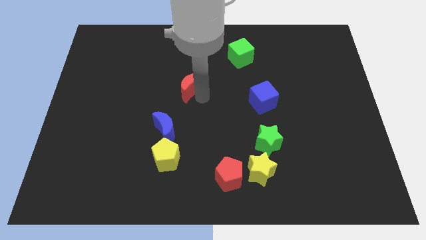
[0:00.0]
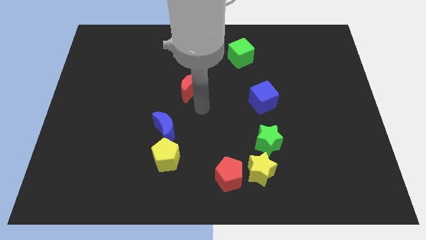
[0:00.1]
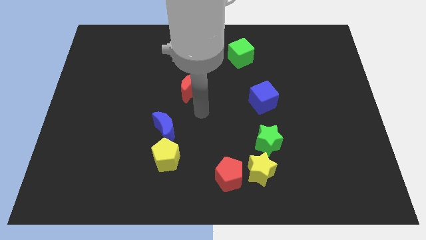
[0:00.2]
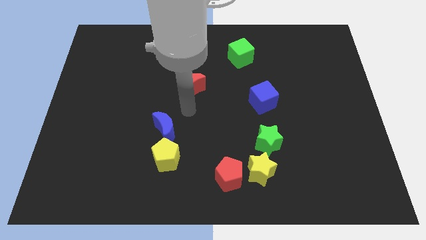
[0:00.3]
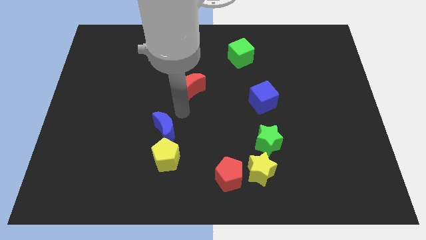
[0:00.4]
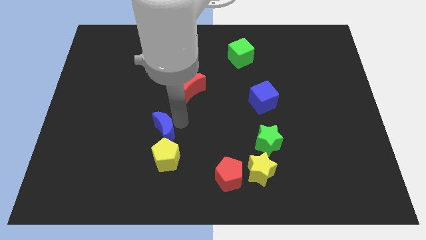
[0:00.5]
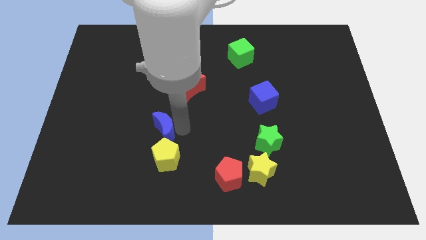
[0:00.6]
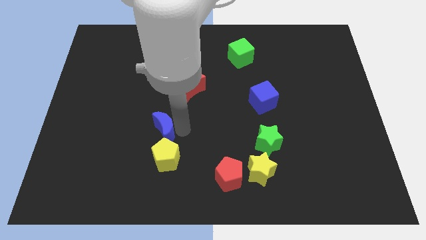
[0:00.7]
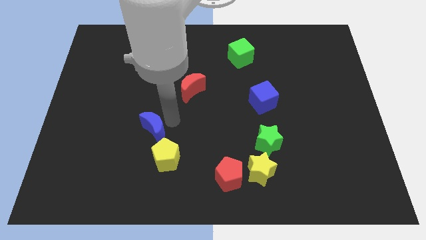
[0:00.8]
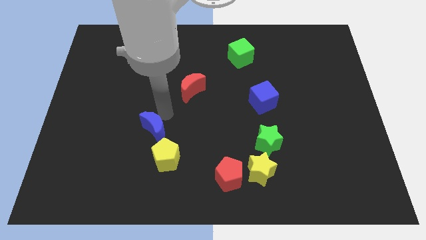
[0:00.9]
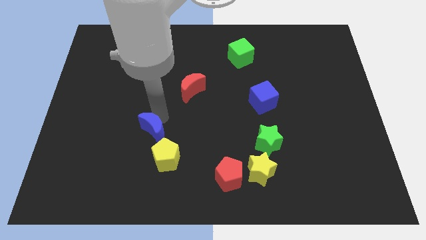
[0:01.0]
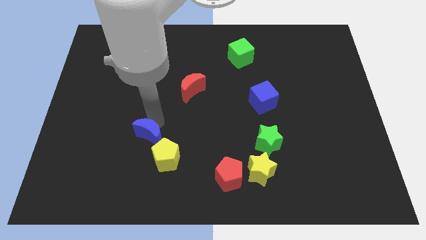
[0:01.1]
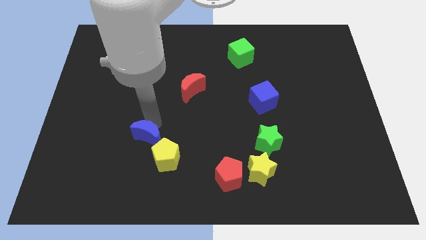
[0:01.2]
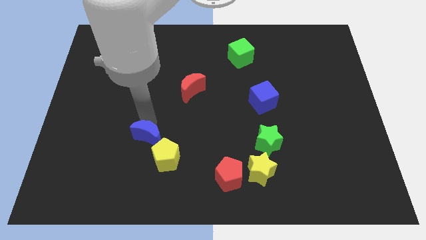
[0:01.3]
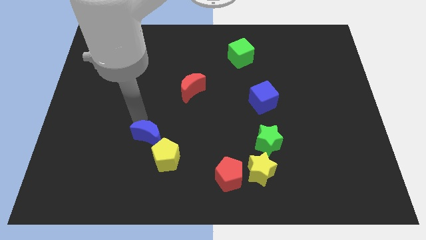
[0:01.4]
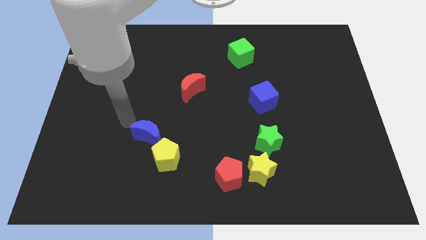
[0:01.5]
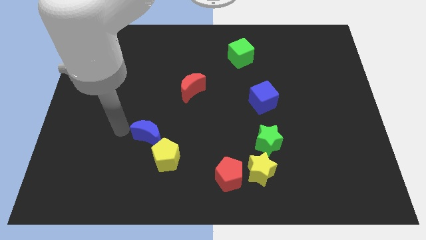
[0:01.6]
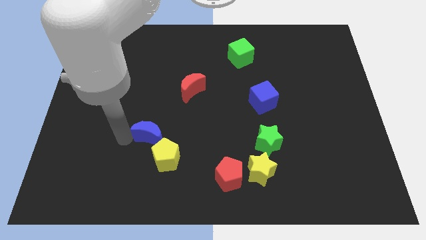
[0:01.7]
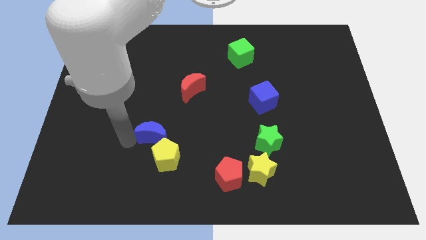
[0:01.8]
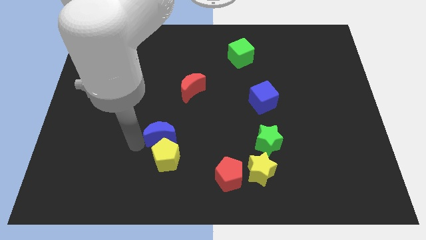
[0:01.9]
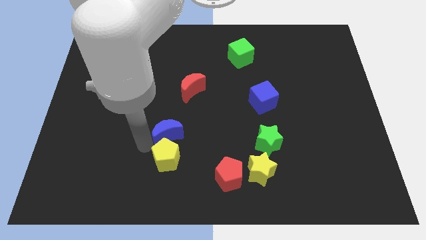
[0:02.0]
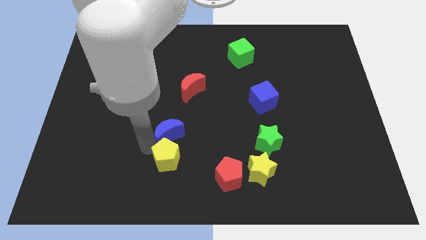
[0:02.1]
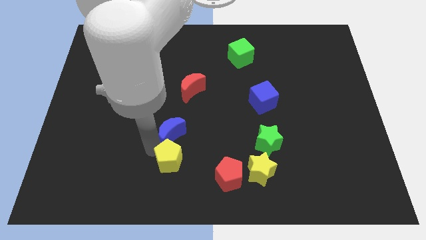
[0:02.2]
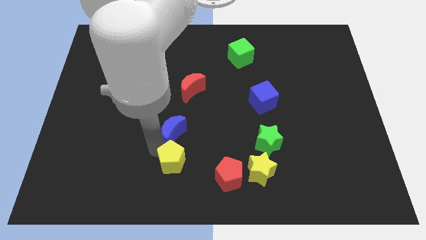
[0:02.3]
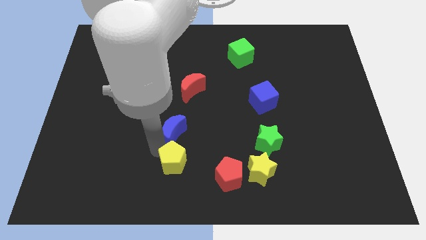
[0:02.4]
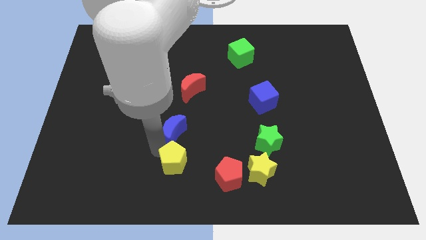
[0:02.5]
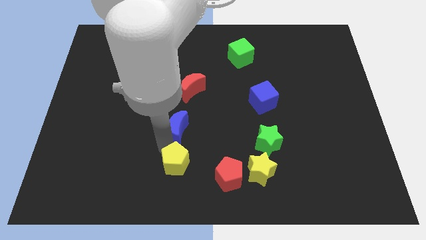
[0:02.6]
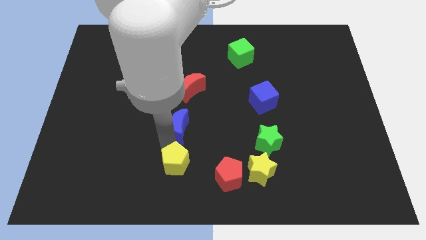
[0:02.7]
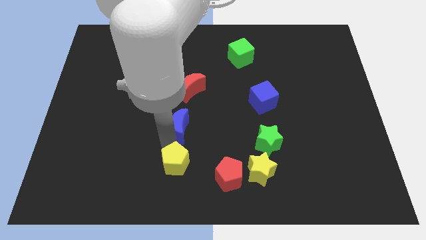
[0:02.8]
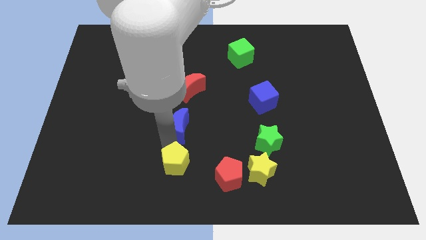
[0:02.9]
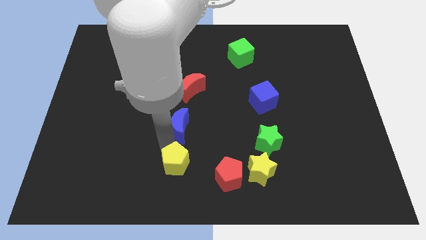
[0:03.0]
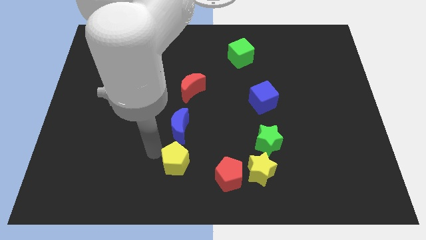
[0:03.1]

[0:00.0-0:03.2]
adjust the blue moon to the center of the red moon and yellow pentagon

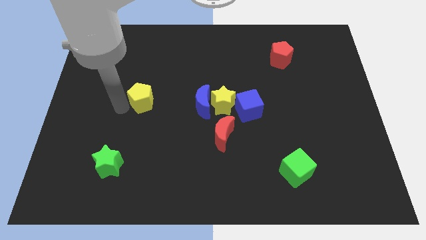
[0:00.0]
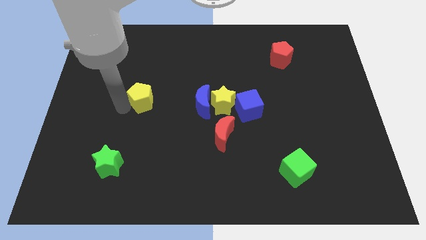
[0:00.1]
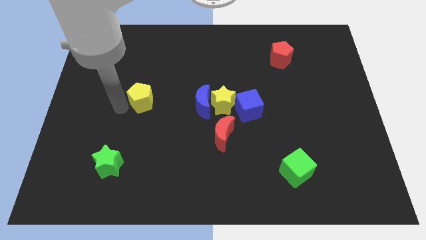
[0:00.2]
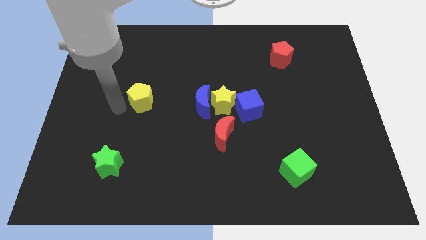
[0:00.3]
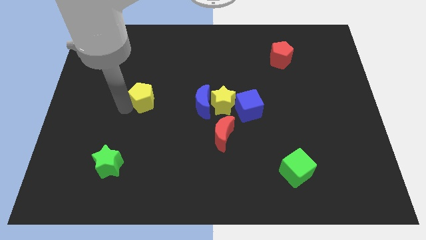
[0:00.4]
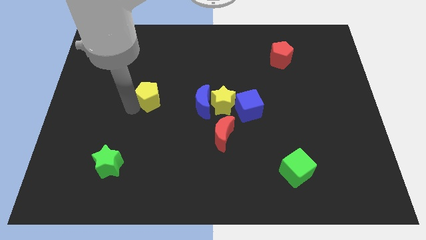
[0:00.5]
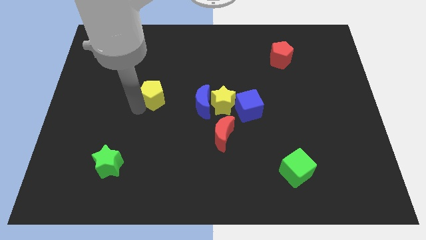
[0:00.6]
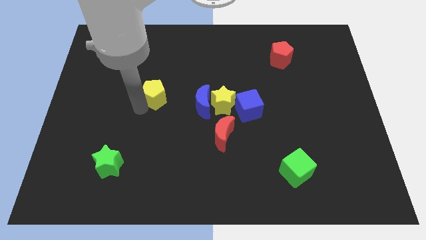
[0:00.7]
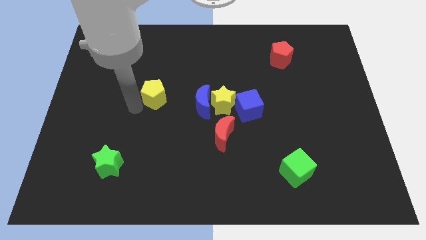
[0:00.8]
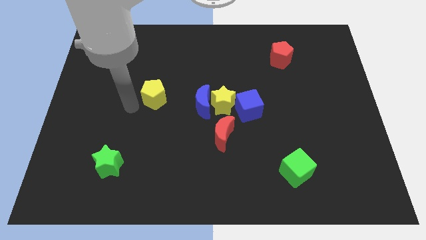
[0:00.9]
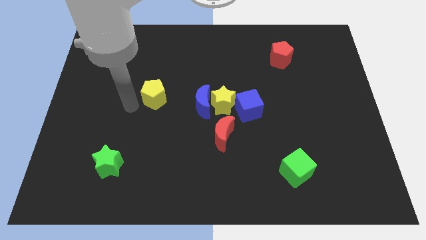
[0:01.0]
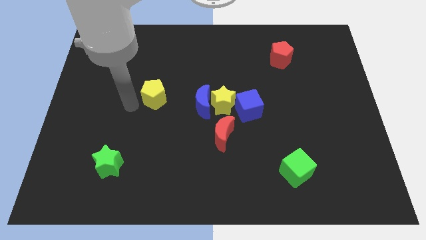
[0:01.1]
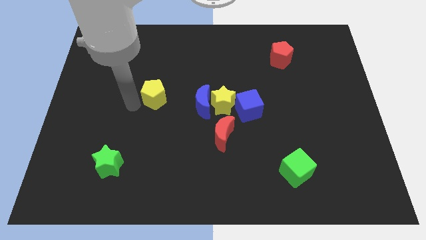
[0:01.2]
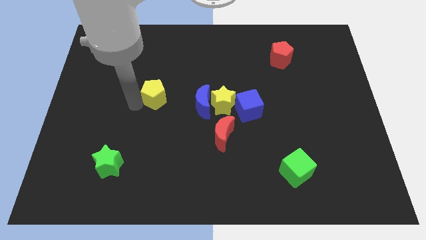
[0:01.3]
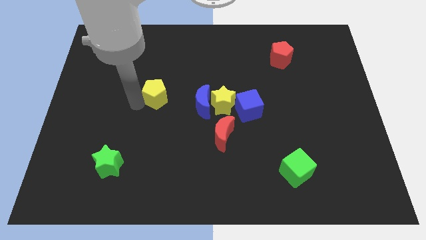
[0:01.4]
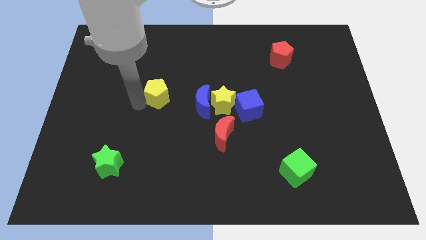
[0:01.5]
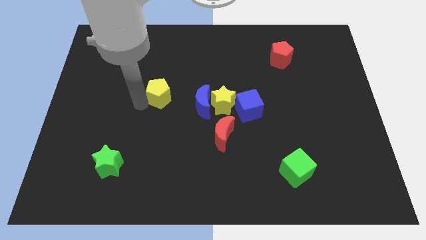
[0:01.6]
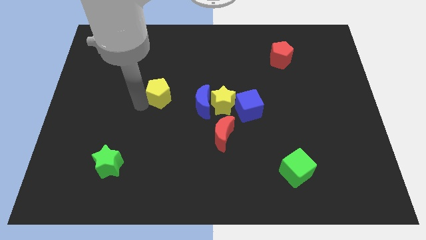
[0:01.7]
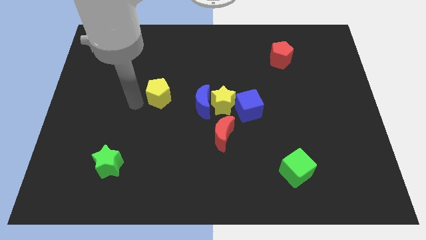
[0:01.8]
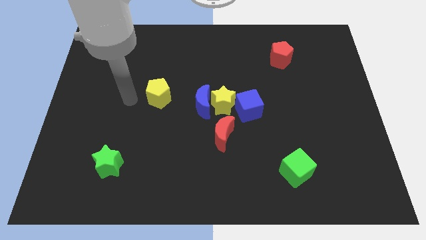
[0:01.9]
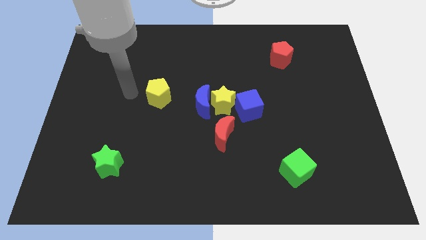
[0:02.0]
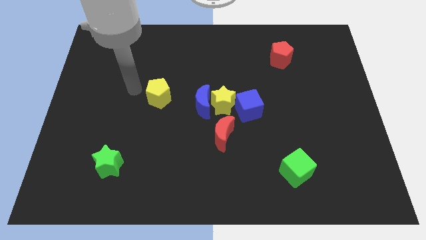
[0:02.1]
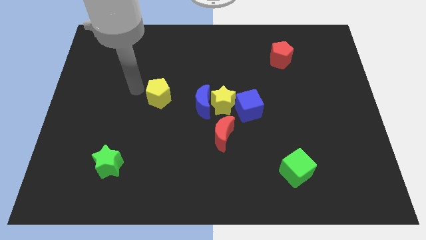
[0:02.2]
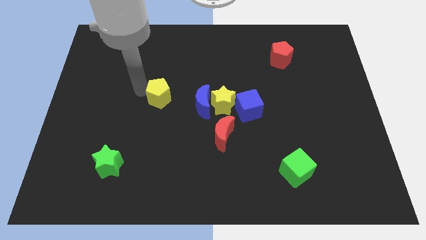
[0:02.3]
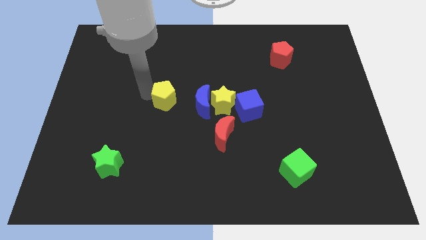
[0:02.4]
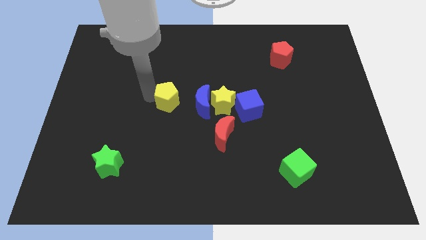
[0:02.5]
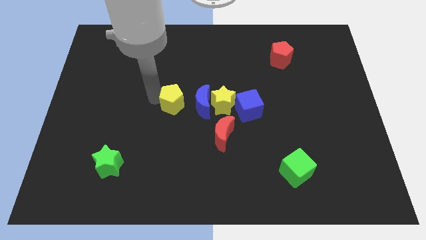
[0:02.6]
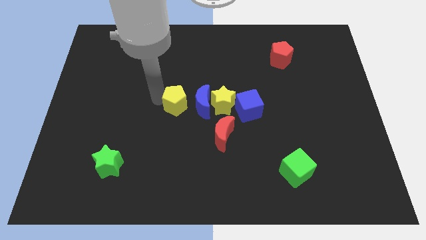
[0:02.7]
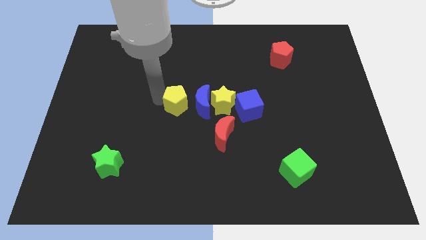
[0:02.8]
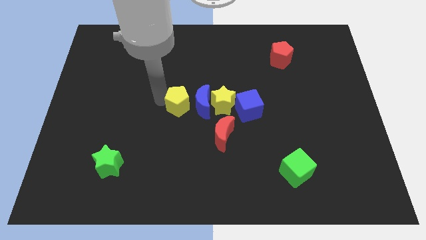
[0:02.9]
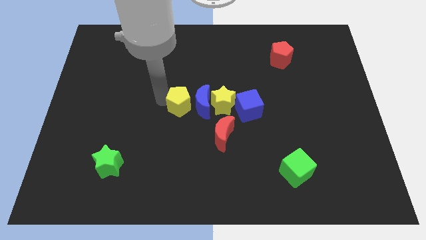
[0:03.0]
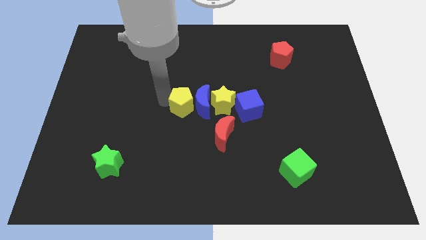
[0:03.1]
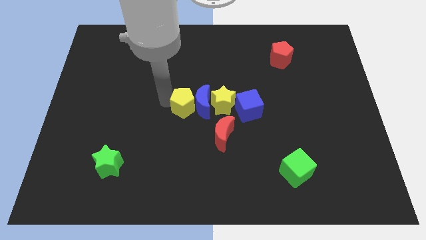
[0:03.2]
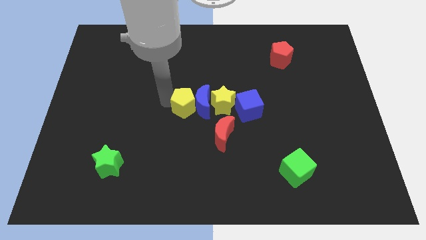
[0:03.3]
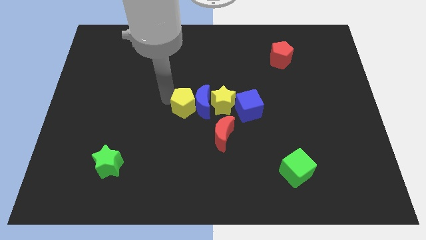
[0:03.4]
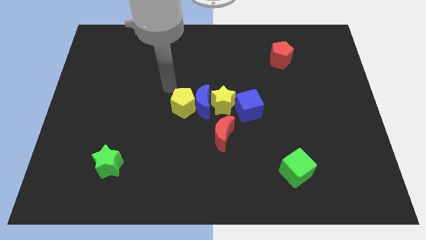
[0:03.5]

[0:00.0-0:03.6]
make the yellow pentagon touch the left side of the blue crescent

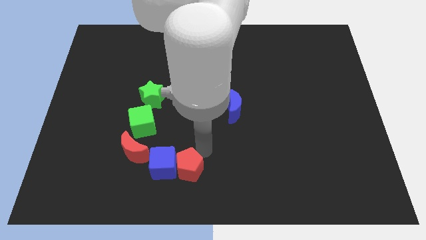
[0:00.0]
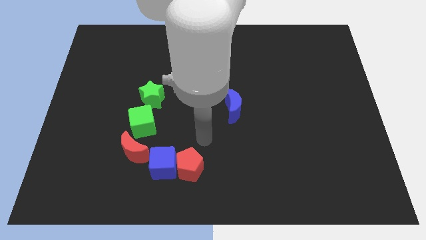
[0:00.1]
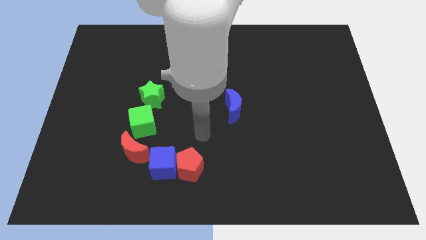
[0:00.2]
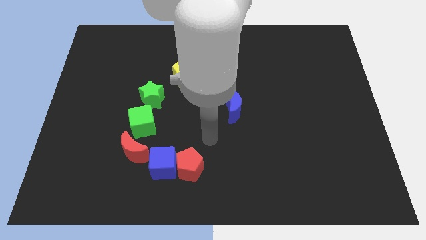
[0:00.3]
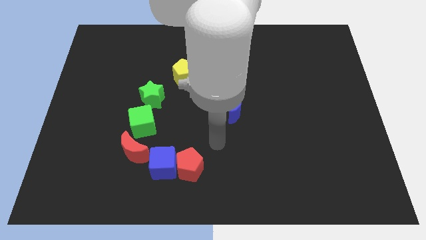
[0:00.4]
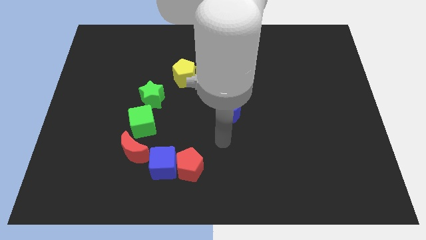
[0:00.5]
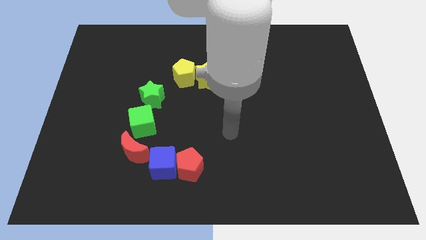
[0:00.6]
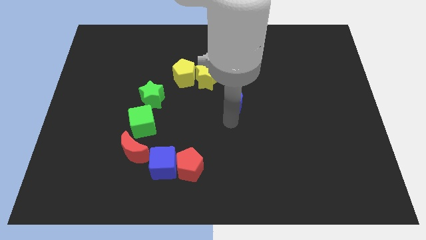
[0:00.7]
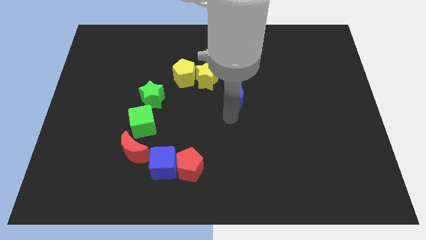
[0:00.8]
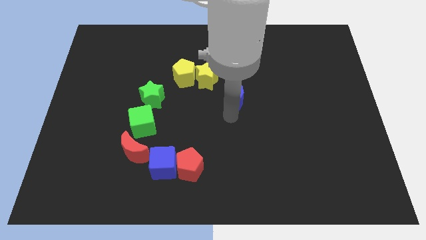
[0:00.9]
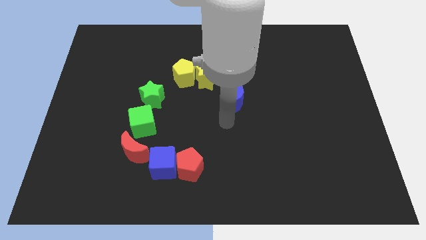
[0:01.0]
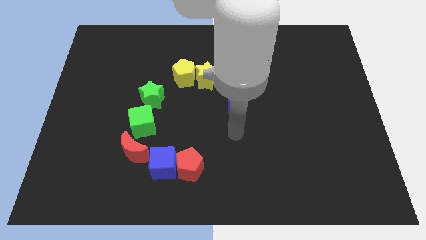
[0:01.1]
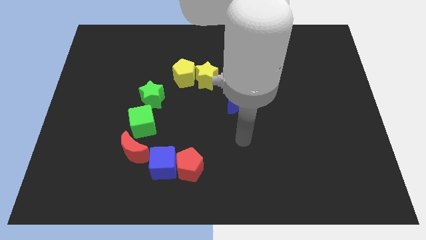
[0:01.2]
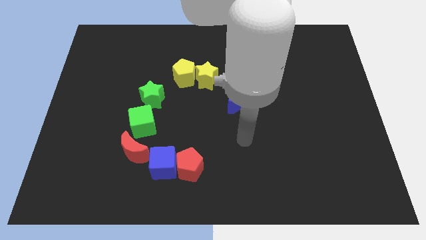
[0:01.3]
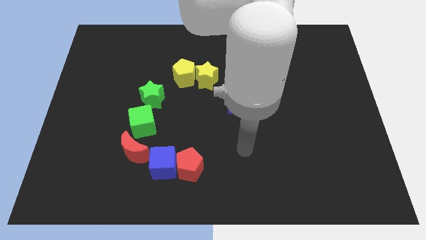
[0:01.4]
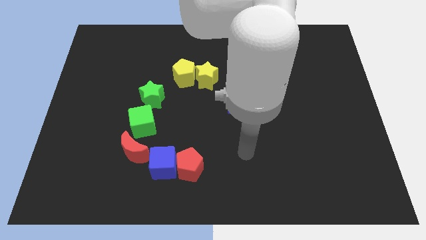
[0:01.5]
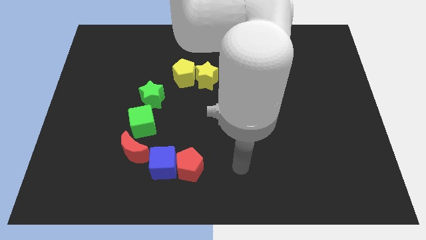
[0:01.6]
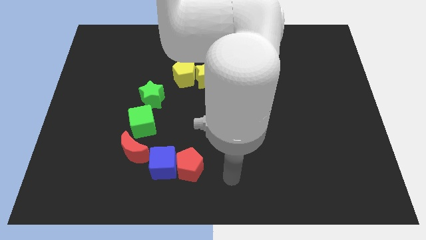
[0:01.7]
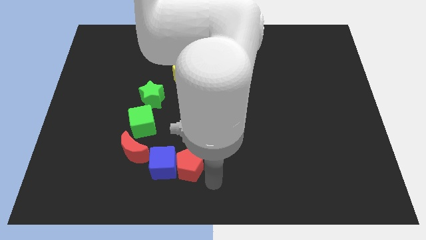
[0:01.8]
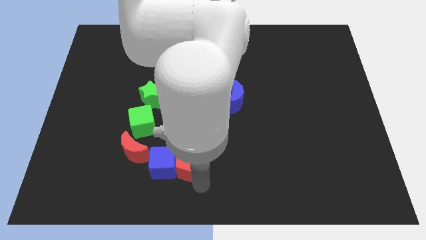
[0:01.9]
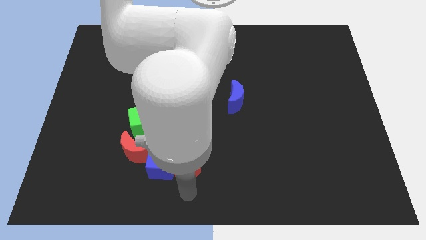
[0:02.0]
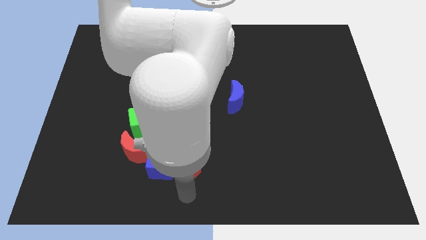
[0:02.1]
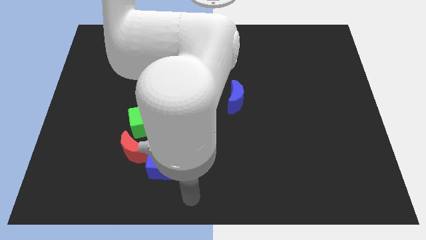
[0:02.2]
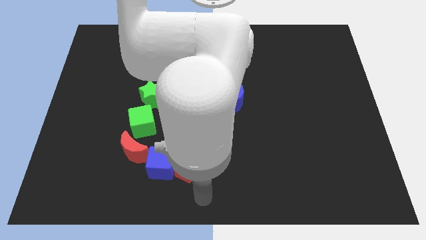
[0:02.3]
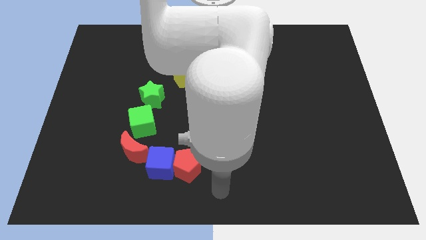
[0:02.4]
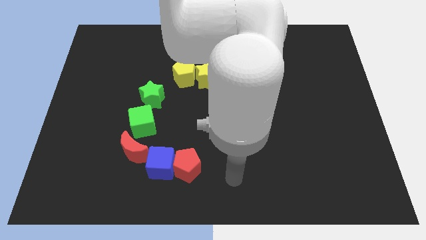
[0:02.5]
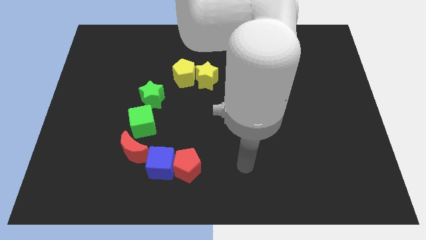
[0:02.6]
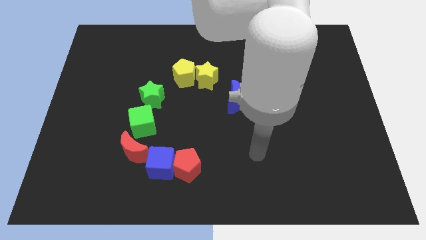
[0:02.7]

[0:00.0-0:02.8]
move the arm away from the blocks
